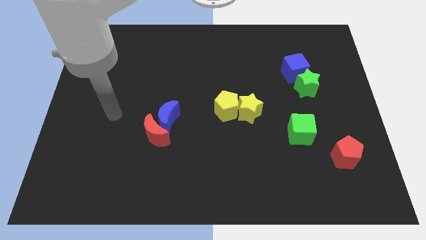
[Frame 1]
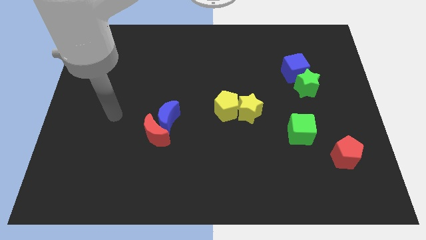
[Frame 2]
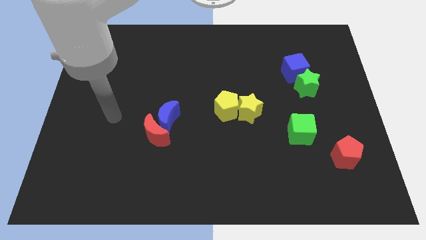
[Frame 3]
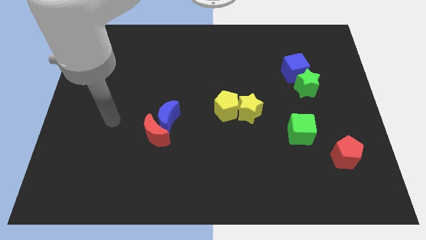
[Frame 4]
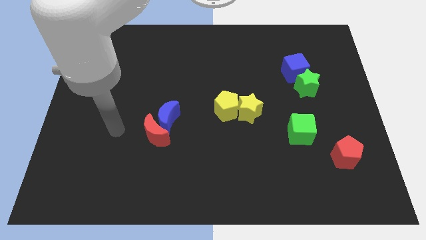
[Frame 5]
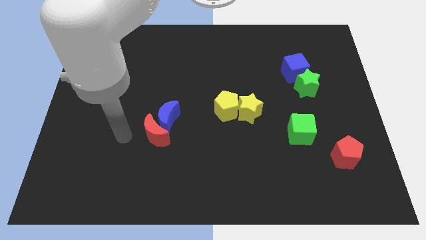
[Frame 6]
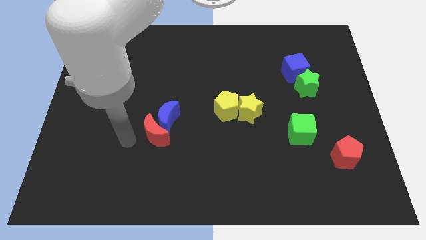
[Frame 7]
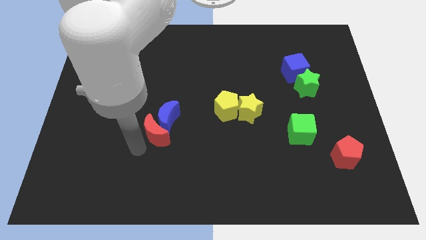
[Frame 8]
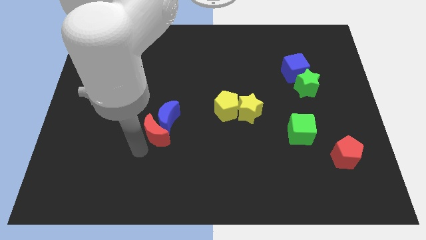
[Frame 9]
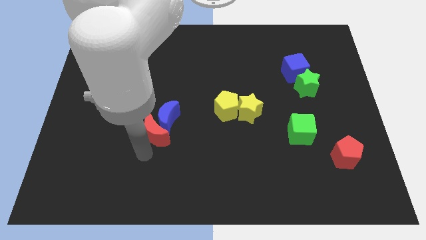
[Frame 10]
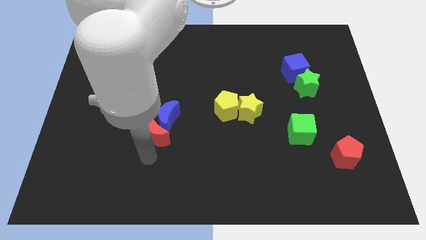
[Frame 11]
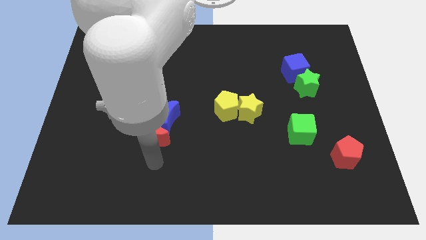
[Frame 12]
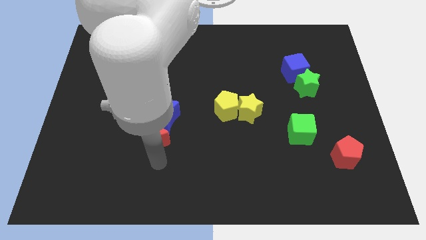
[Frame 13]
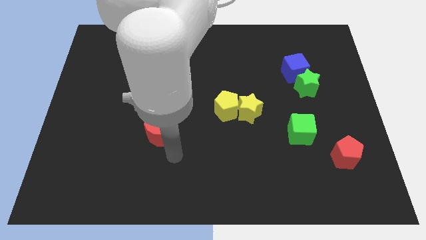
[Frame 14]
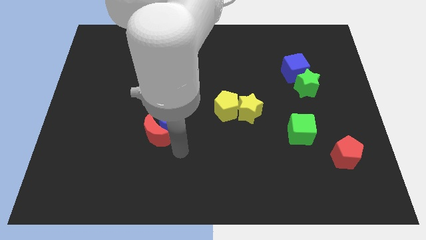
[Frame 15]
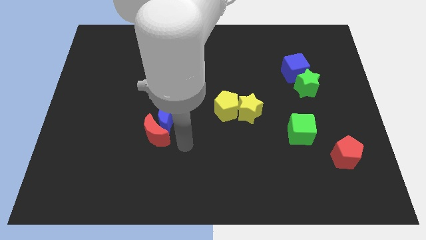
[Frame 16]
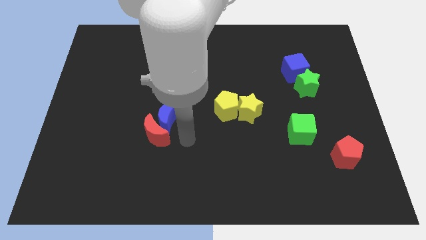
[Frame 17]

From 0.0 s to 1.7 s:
place your arm to the right side of red crescent

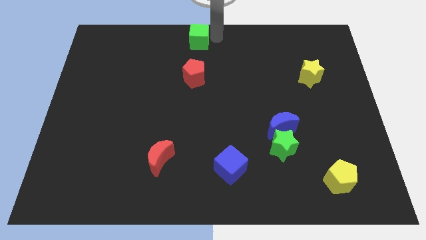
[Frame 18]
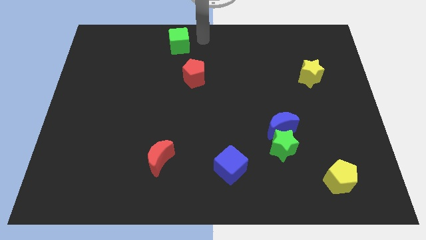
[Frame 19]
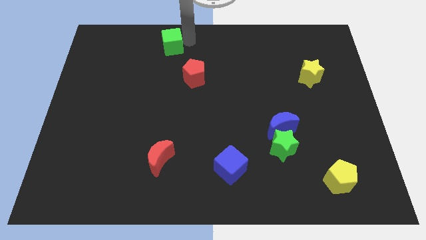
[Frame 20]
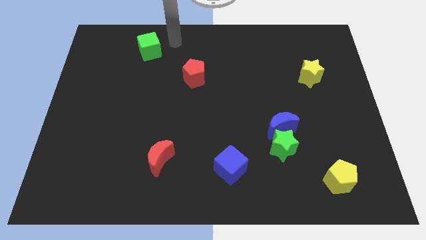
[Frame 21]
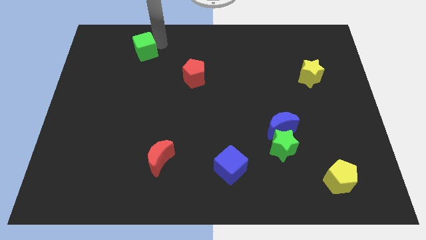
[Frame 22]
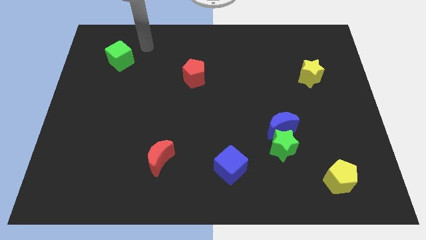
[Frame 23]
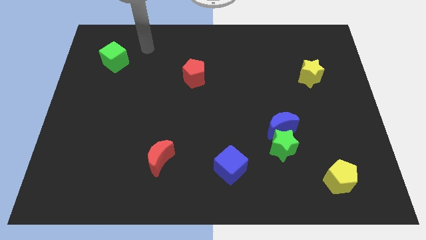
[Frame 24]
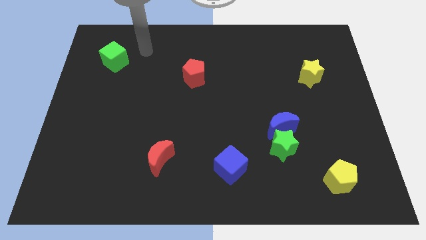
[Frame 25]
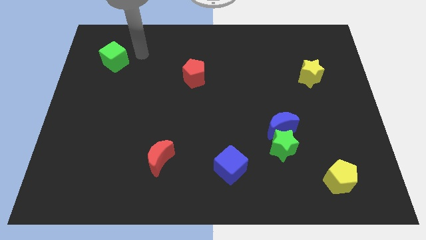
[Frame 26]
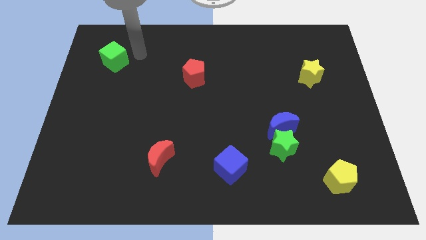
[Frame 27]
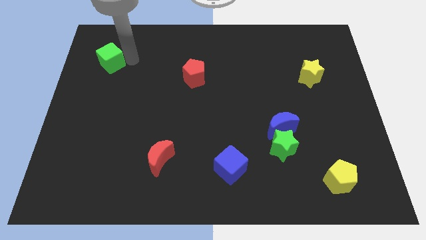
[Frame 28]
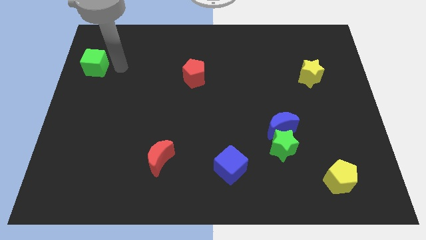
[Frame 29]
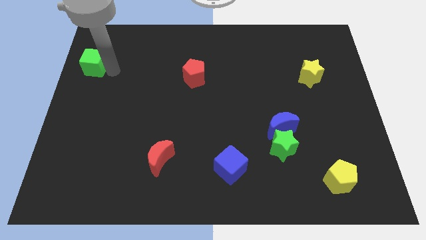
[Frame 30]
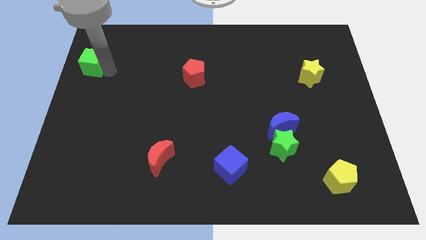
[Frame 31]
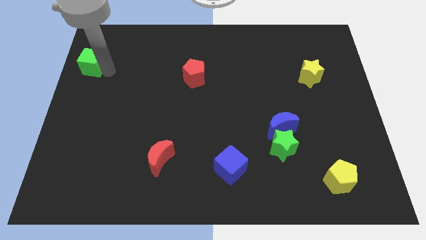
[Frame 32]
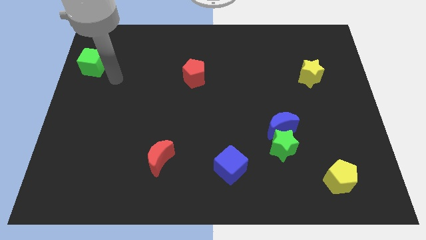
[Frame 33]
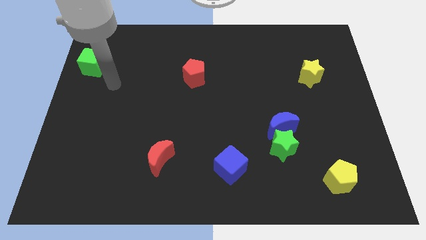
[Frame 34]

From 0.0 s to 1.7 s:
move the green cube to the left of the red pentagon

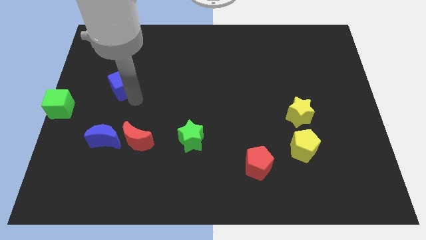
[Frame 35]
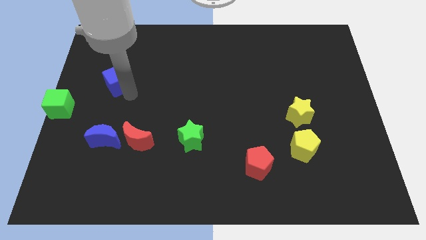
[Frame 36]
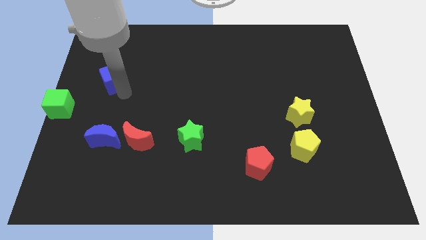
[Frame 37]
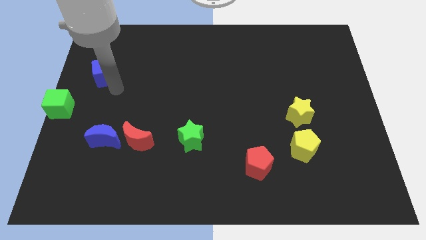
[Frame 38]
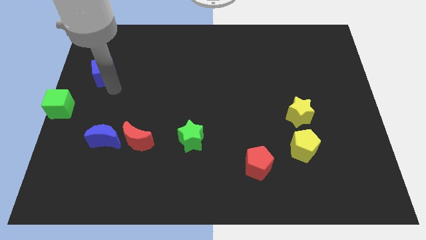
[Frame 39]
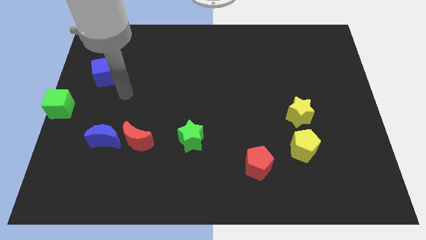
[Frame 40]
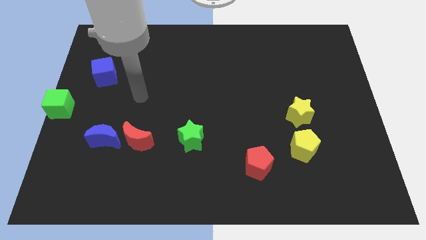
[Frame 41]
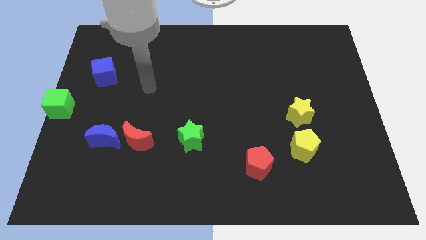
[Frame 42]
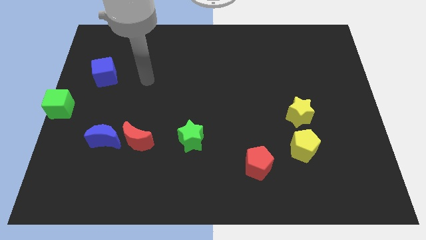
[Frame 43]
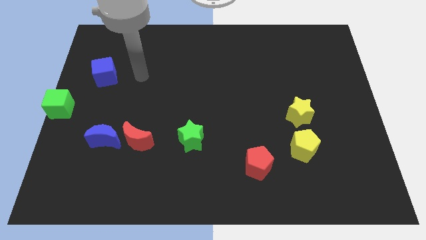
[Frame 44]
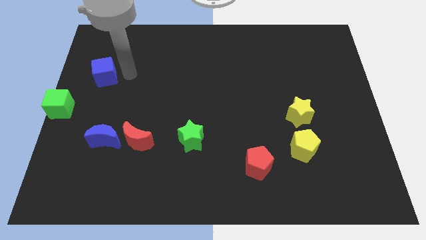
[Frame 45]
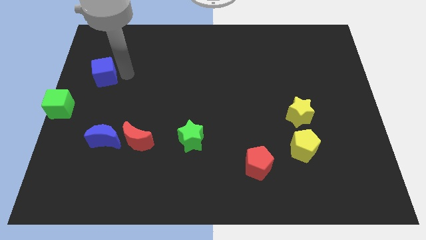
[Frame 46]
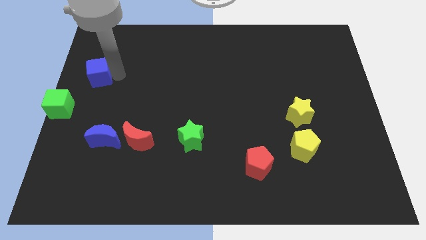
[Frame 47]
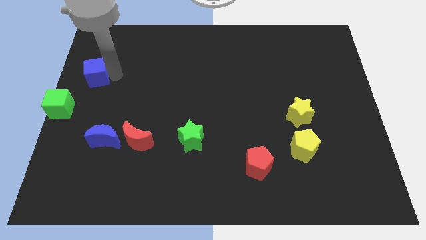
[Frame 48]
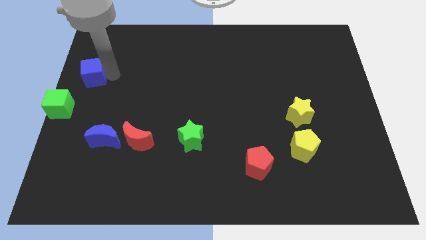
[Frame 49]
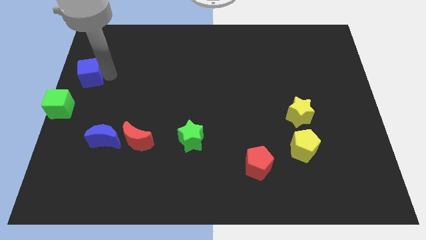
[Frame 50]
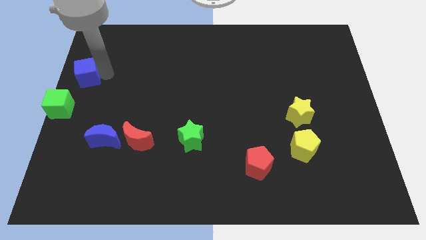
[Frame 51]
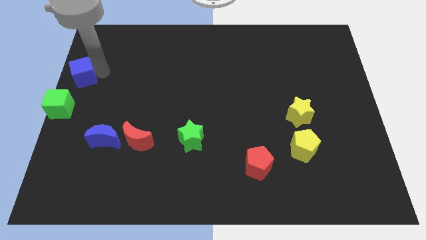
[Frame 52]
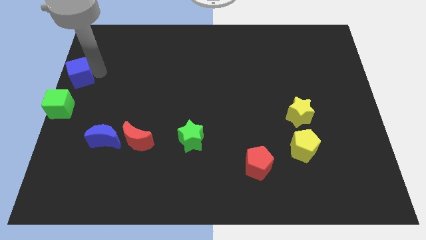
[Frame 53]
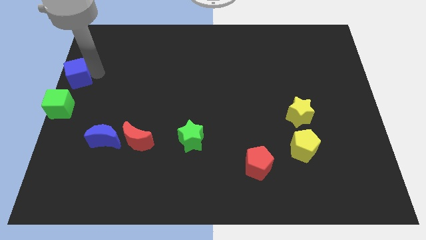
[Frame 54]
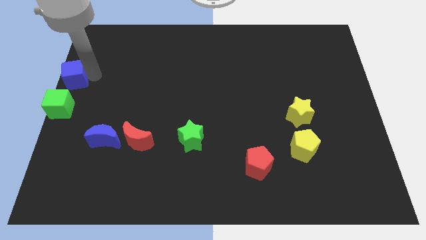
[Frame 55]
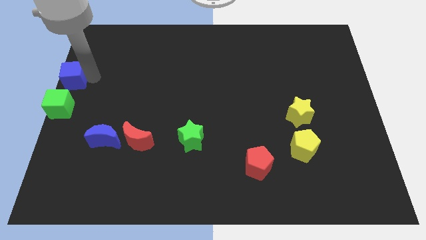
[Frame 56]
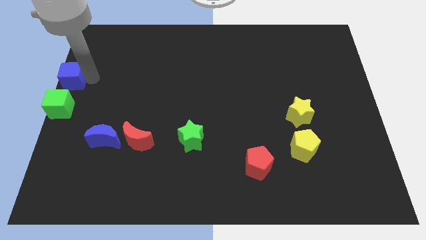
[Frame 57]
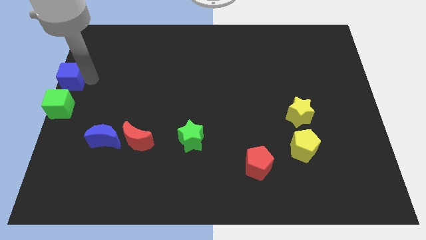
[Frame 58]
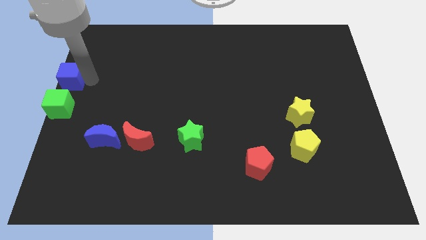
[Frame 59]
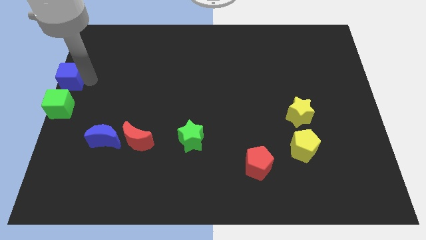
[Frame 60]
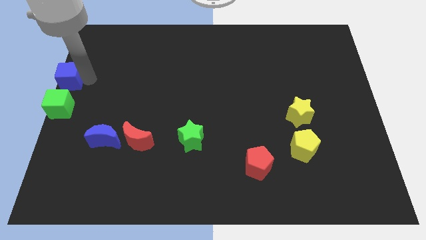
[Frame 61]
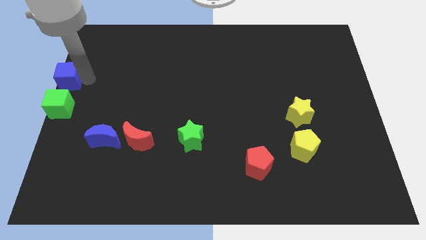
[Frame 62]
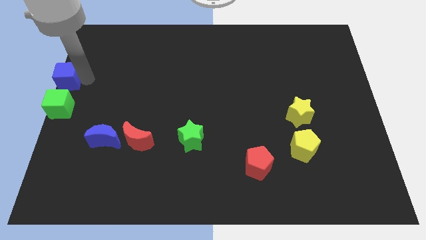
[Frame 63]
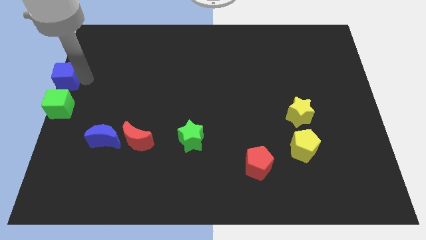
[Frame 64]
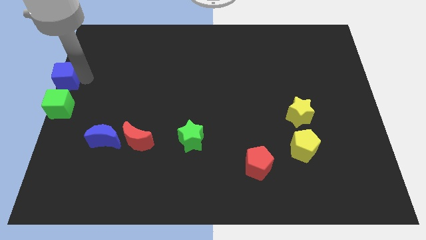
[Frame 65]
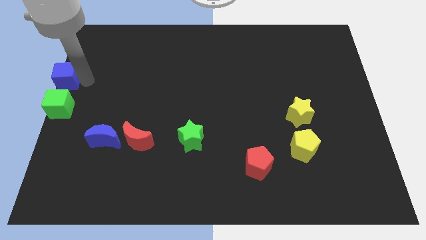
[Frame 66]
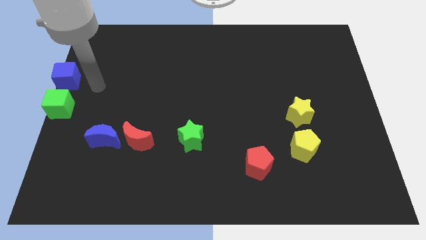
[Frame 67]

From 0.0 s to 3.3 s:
place the blue cube on top of green cube

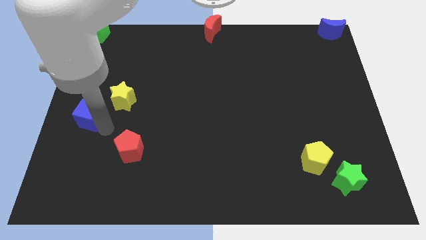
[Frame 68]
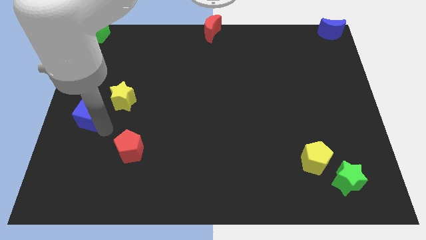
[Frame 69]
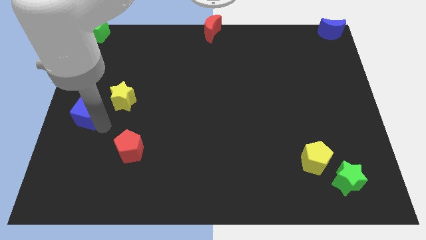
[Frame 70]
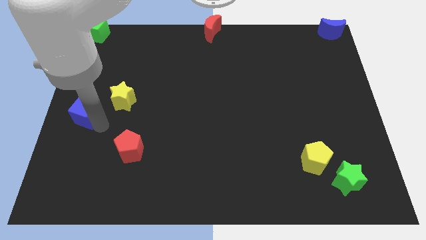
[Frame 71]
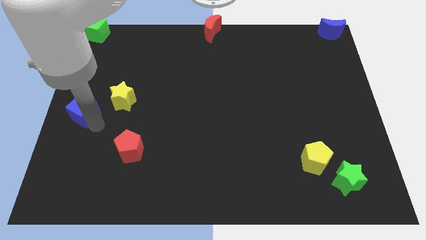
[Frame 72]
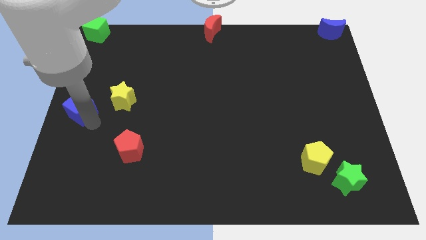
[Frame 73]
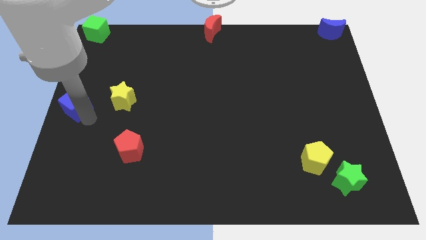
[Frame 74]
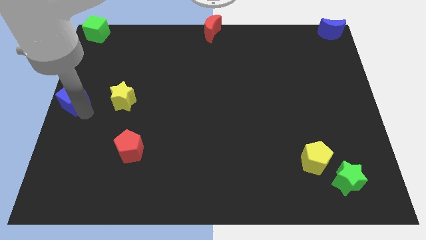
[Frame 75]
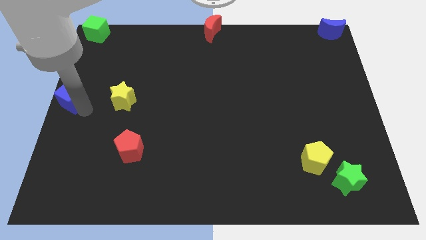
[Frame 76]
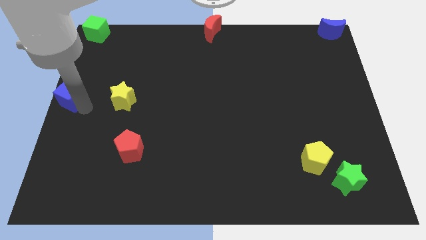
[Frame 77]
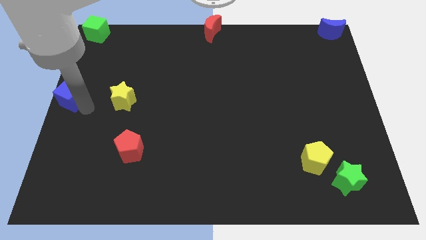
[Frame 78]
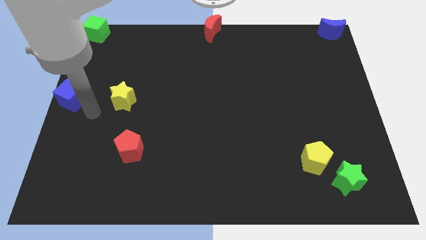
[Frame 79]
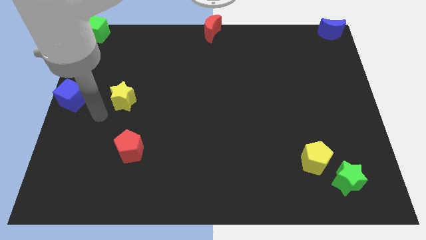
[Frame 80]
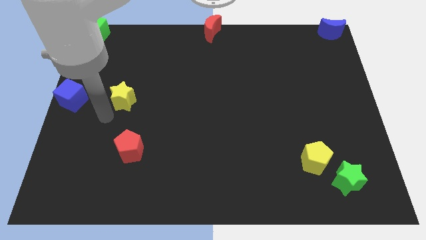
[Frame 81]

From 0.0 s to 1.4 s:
move the blue cube to the center left of the board

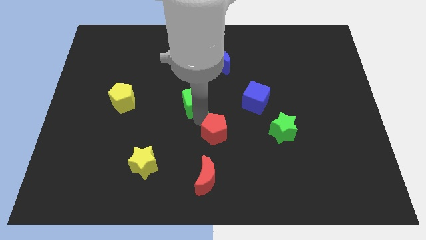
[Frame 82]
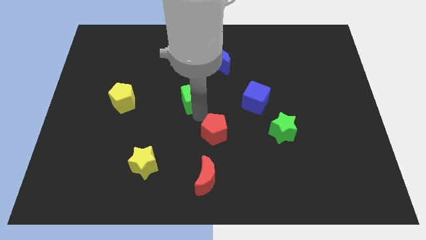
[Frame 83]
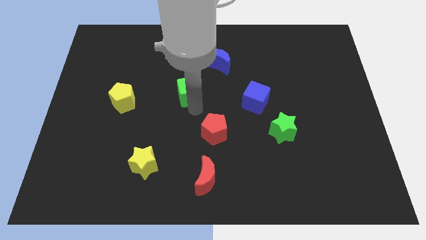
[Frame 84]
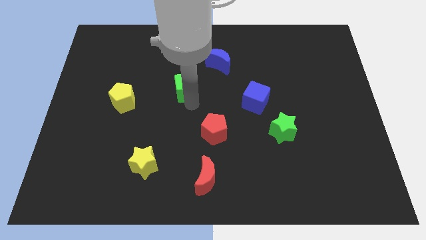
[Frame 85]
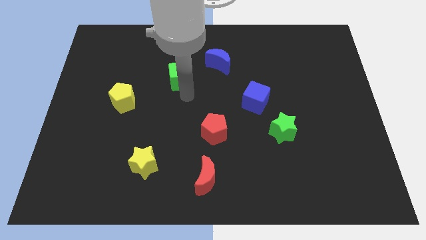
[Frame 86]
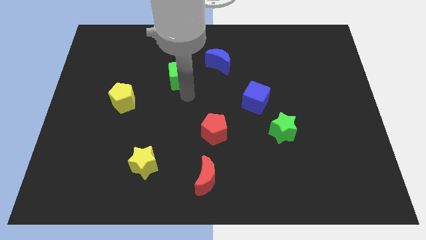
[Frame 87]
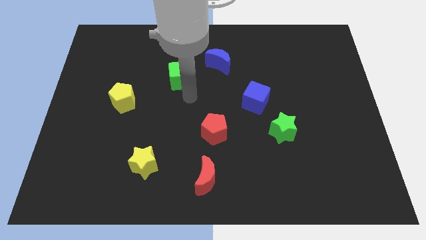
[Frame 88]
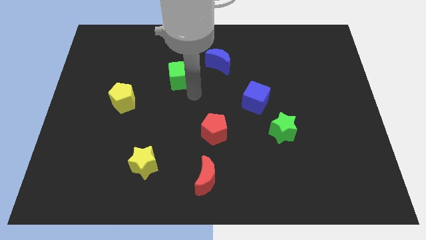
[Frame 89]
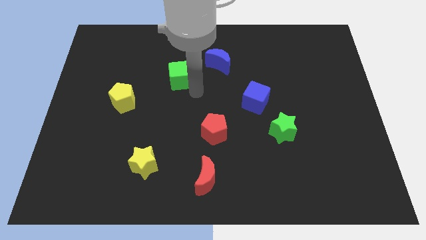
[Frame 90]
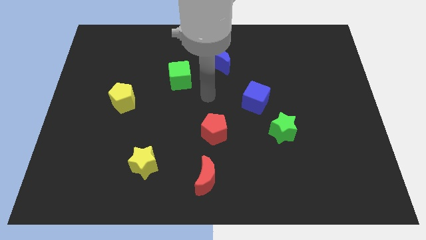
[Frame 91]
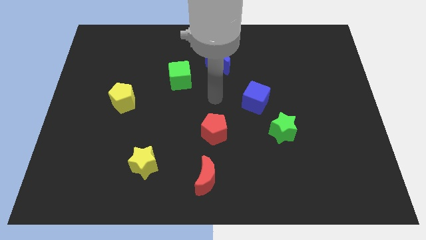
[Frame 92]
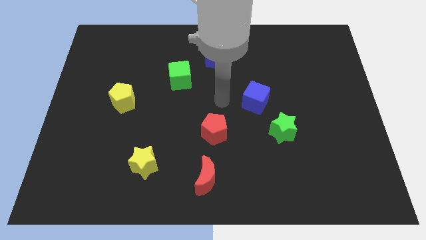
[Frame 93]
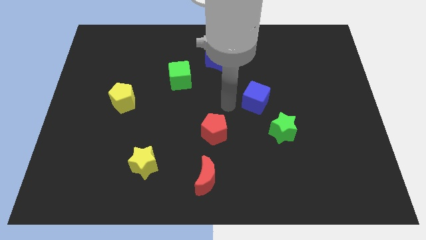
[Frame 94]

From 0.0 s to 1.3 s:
put the green cube between the yellow pentagon and blue moon
